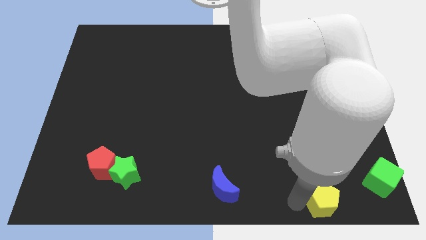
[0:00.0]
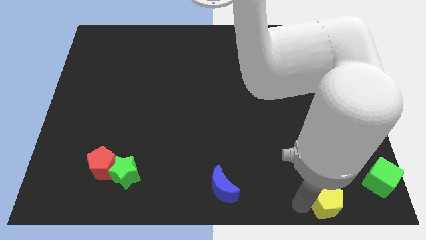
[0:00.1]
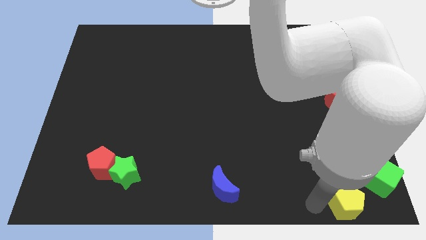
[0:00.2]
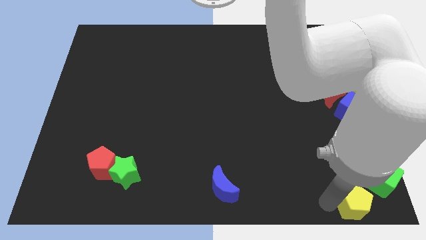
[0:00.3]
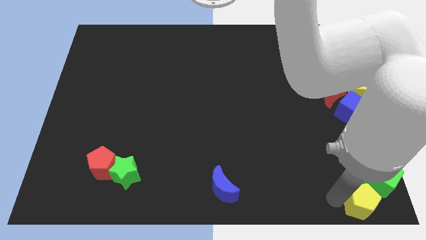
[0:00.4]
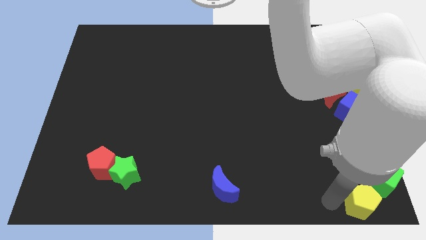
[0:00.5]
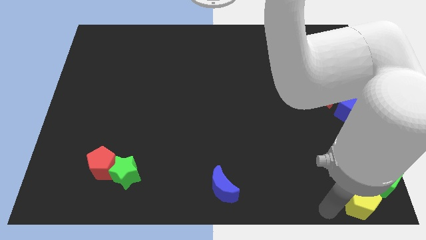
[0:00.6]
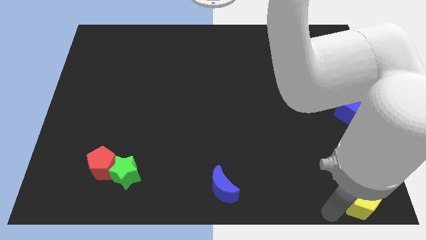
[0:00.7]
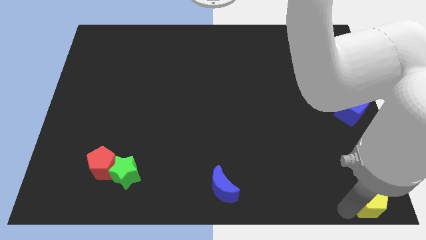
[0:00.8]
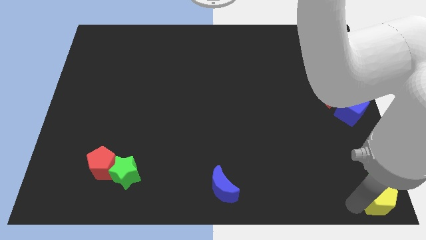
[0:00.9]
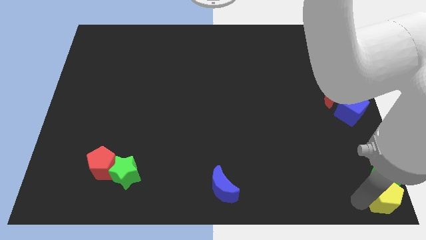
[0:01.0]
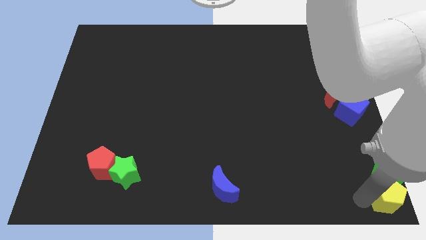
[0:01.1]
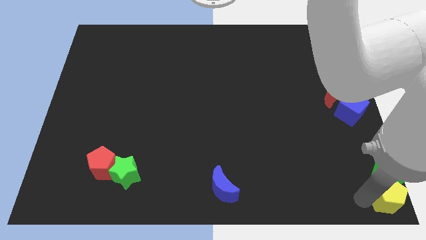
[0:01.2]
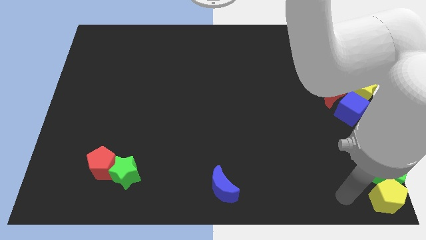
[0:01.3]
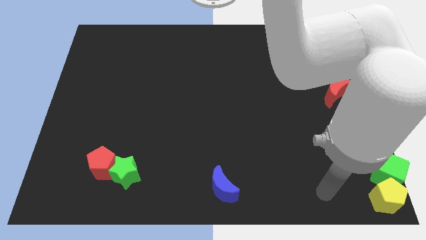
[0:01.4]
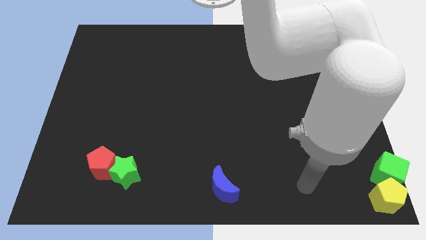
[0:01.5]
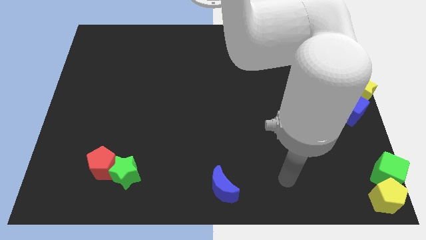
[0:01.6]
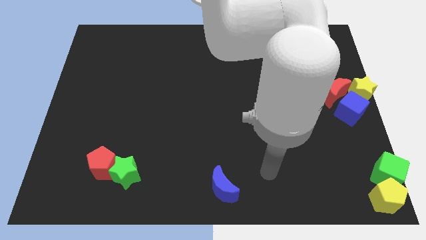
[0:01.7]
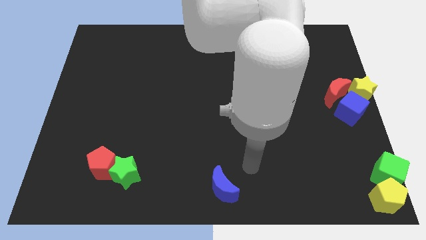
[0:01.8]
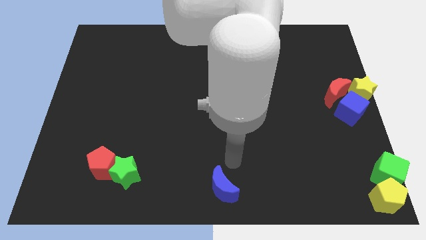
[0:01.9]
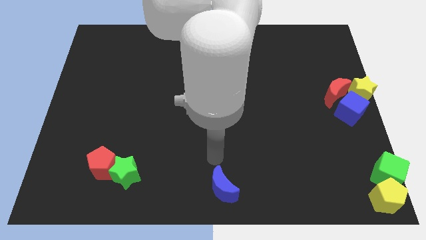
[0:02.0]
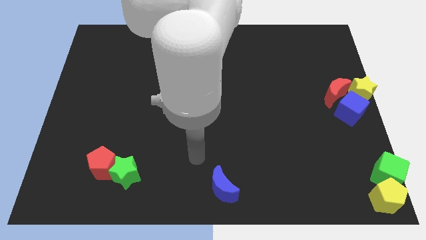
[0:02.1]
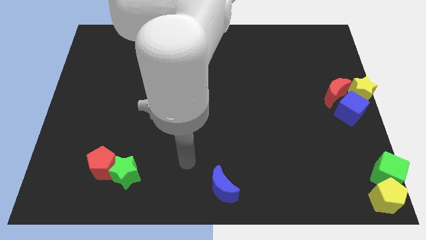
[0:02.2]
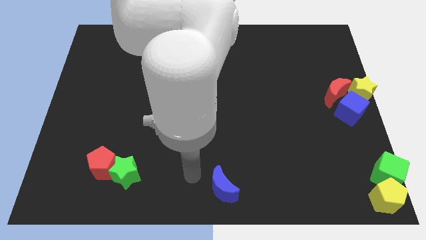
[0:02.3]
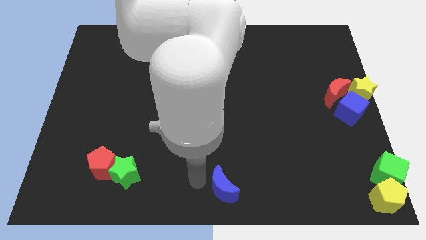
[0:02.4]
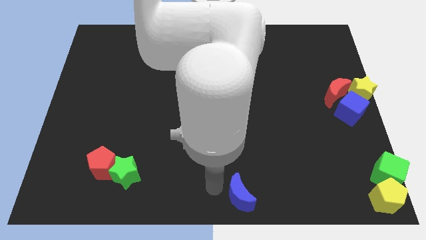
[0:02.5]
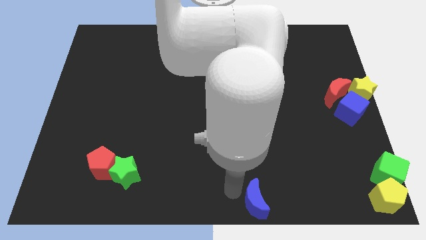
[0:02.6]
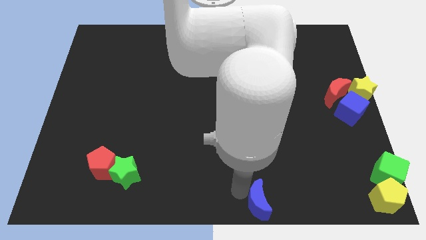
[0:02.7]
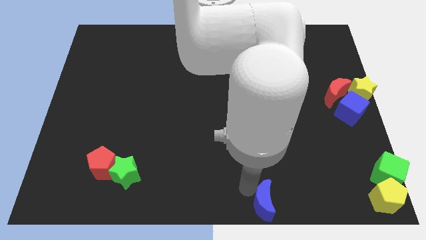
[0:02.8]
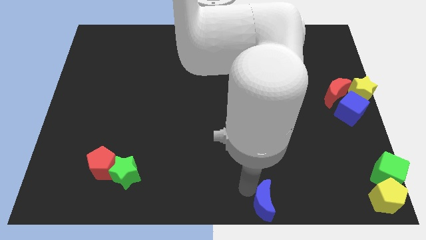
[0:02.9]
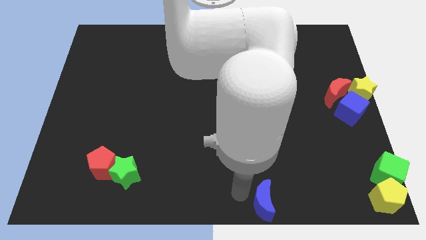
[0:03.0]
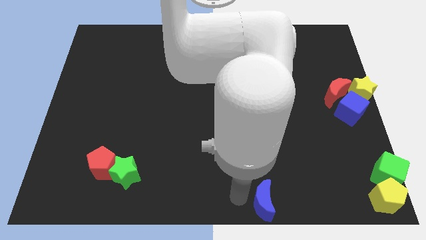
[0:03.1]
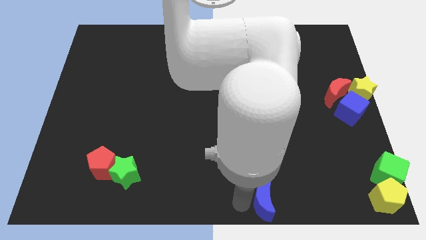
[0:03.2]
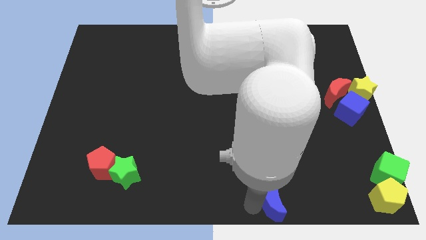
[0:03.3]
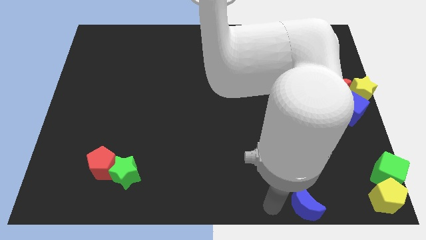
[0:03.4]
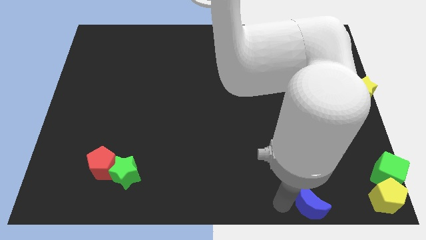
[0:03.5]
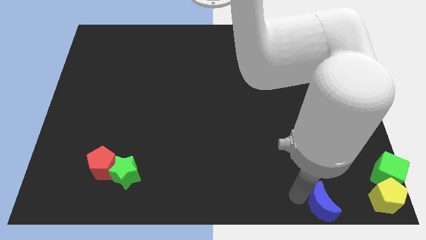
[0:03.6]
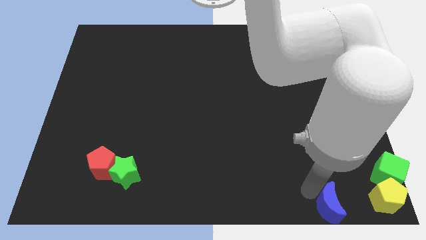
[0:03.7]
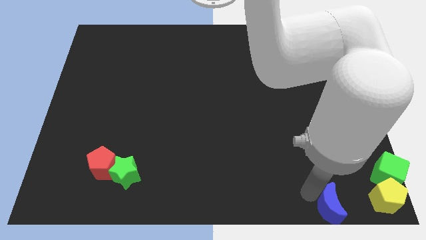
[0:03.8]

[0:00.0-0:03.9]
place the yellow pentagon below the green cube

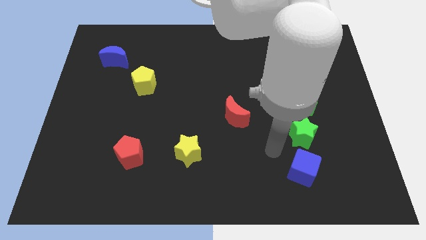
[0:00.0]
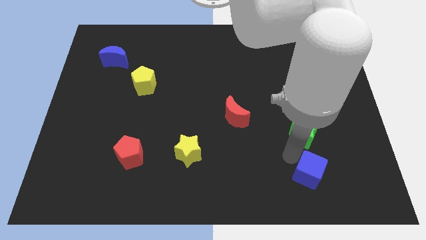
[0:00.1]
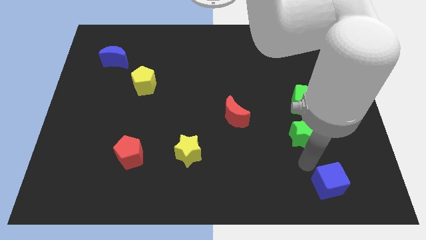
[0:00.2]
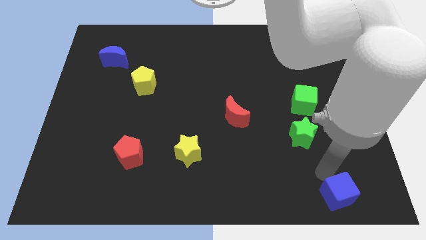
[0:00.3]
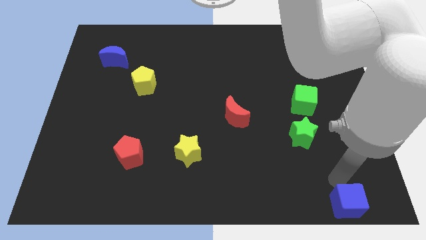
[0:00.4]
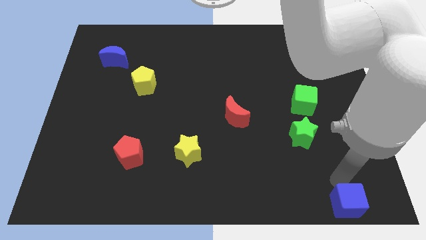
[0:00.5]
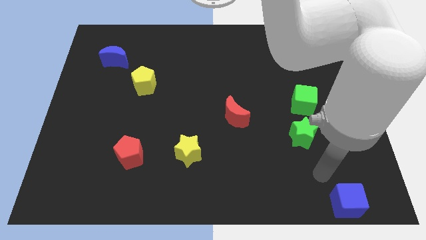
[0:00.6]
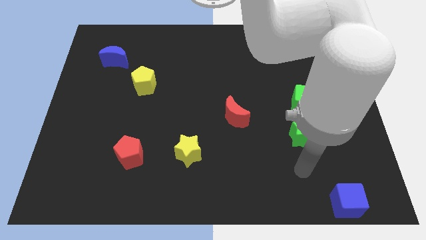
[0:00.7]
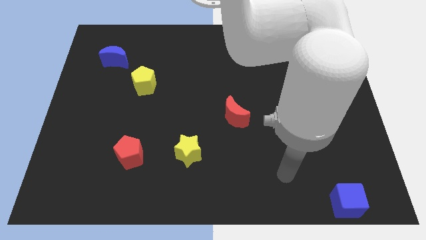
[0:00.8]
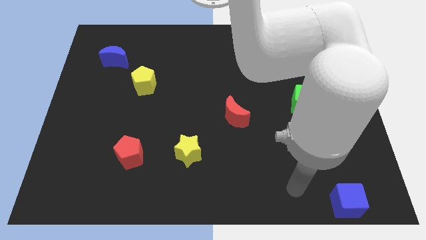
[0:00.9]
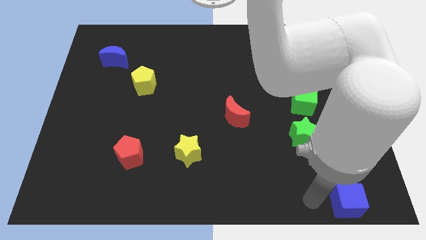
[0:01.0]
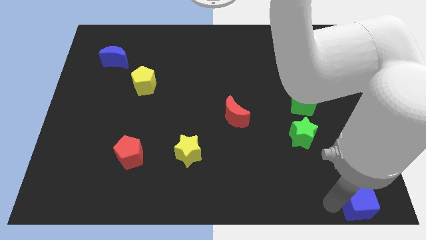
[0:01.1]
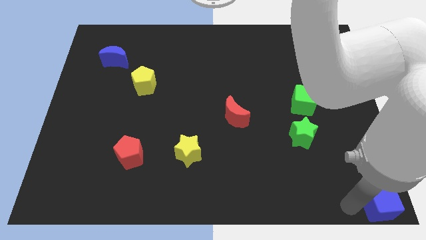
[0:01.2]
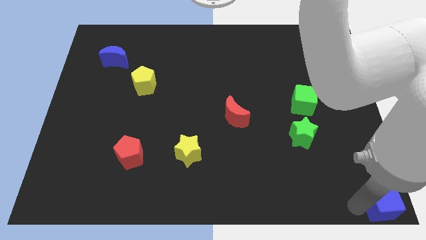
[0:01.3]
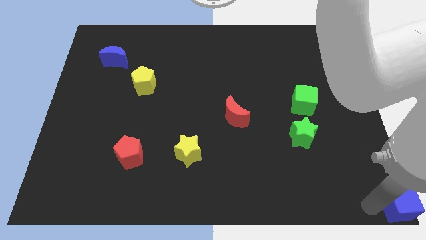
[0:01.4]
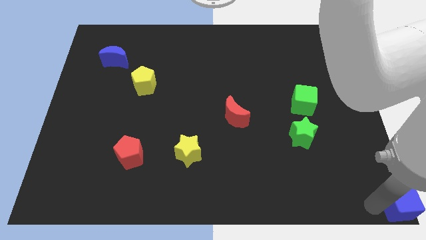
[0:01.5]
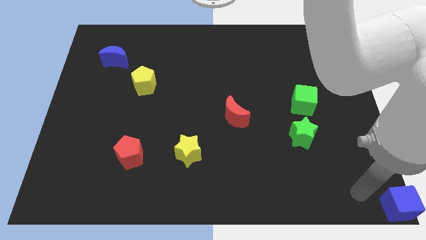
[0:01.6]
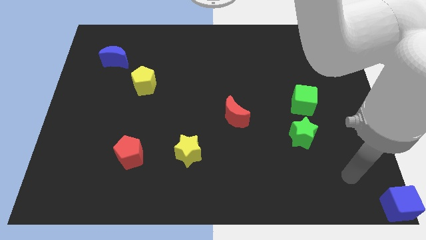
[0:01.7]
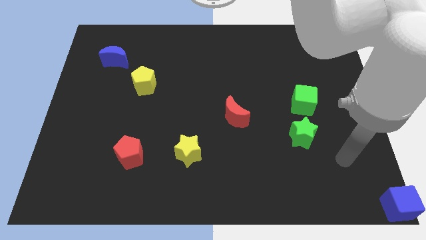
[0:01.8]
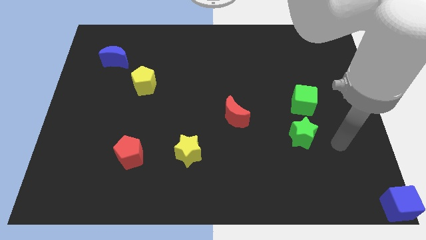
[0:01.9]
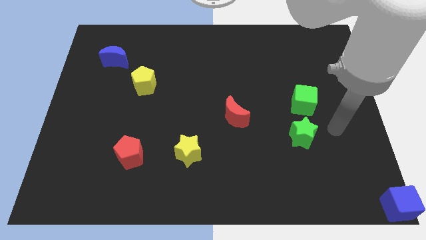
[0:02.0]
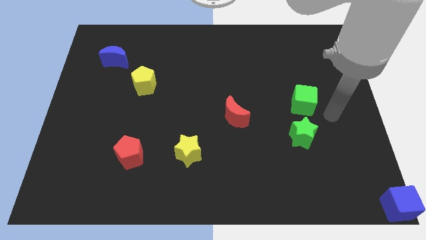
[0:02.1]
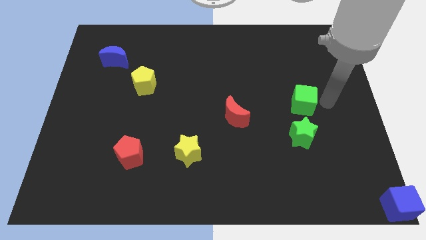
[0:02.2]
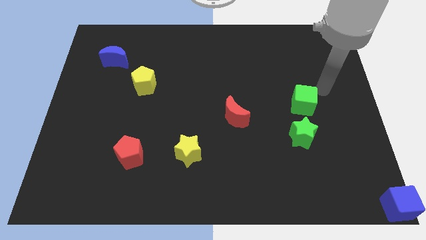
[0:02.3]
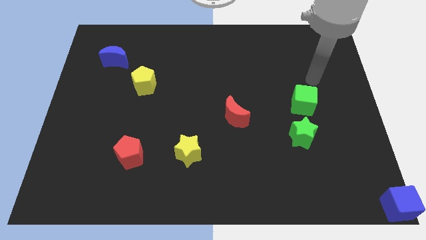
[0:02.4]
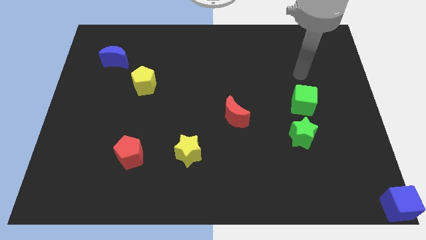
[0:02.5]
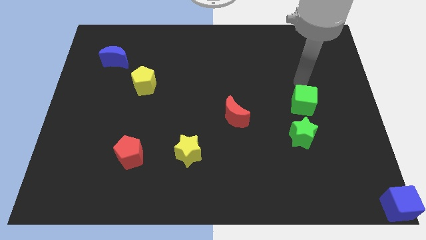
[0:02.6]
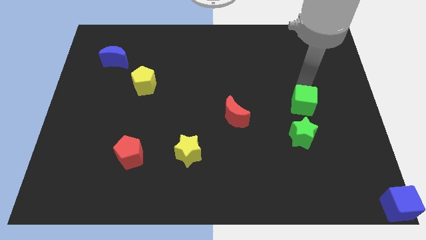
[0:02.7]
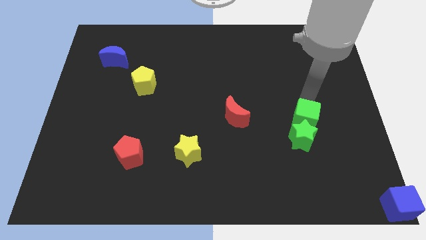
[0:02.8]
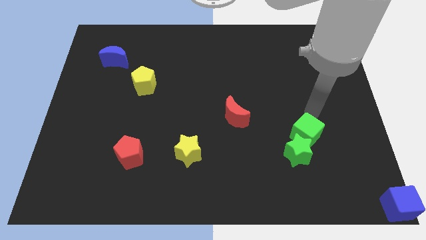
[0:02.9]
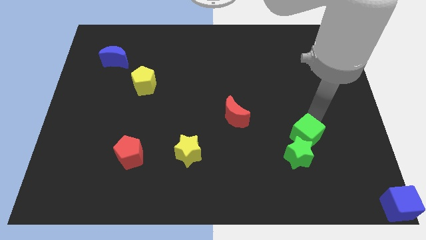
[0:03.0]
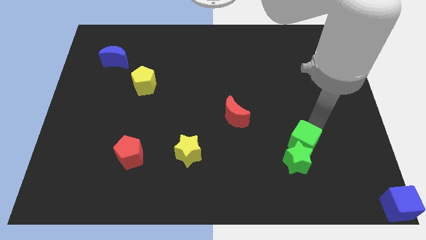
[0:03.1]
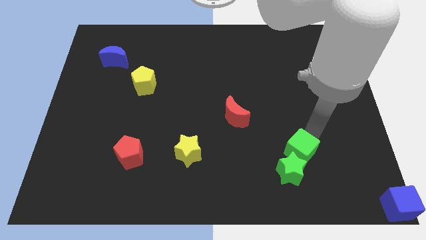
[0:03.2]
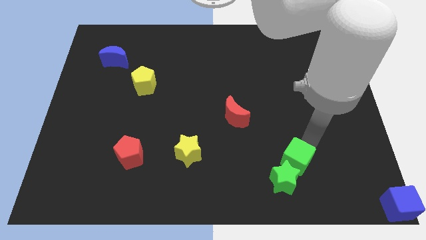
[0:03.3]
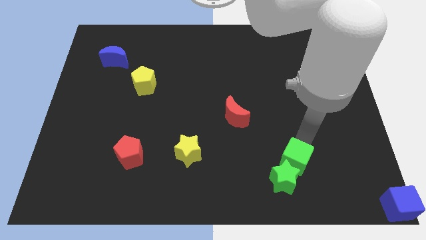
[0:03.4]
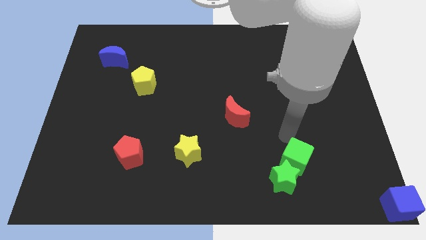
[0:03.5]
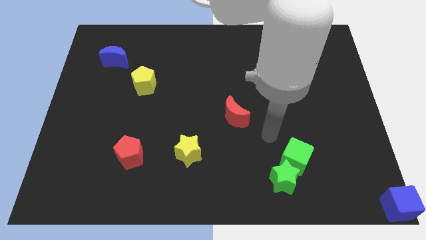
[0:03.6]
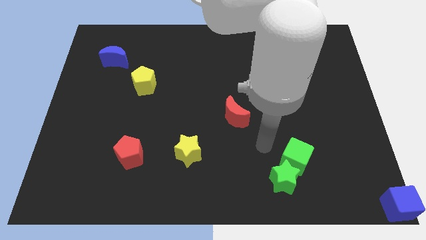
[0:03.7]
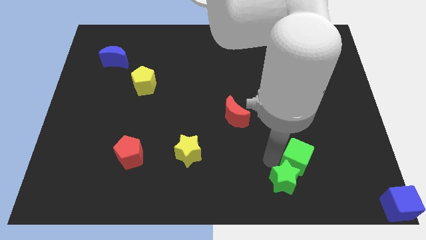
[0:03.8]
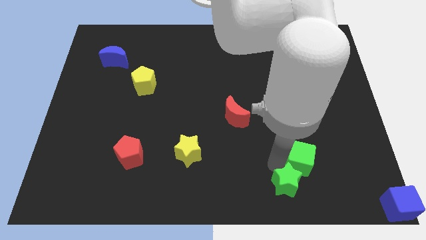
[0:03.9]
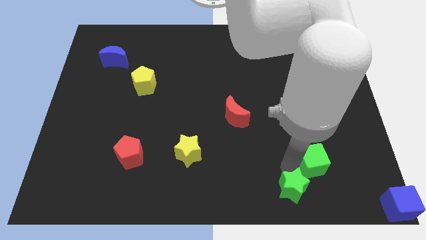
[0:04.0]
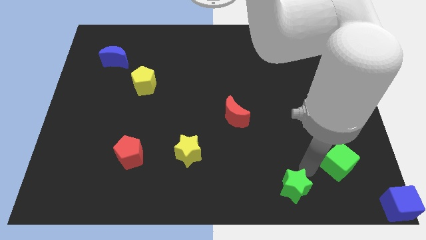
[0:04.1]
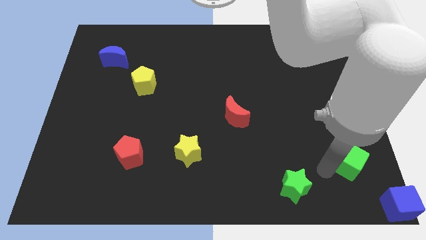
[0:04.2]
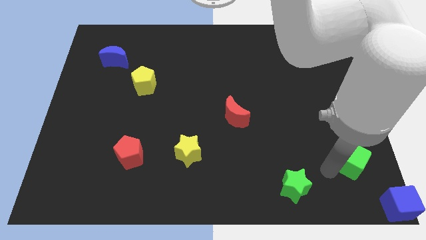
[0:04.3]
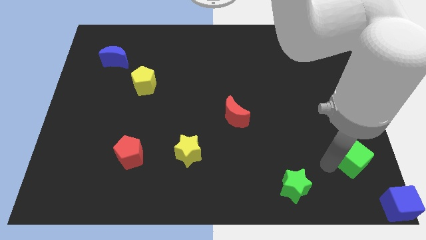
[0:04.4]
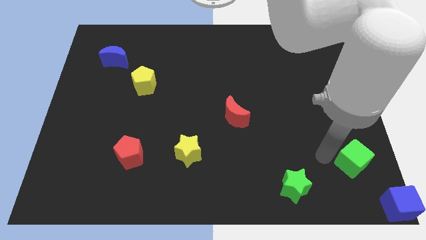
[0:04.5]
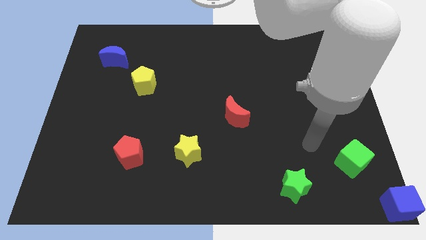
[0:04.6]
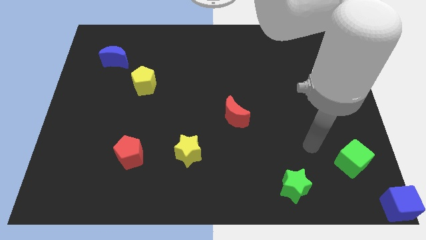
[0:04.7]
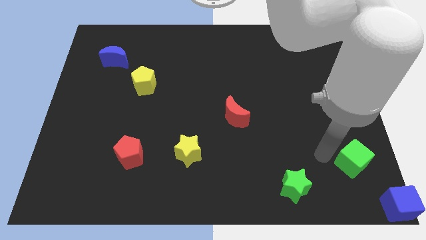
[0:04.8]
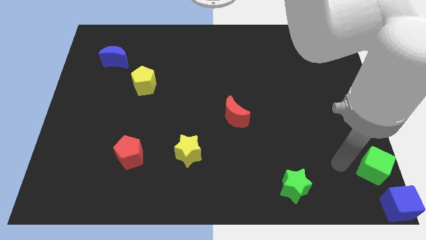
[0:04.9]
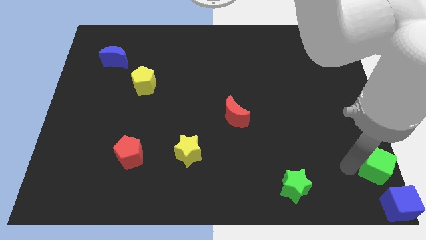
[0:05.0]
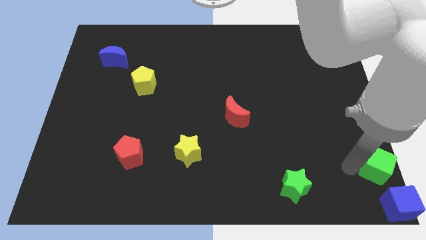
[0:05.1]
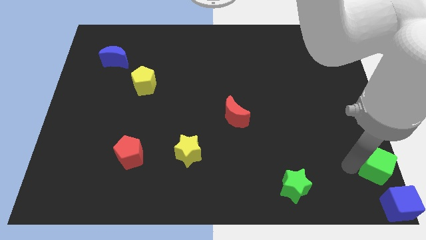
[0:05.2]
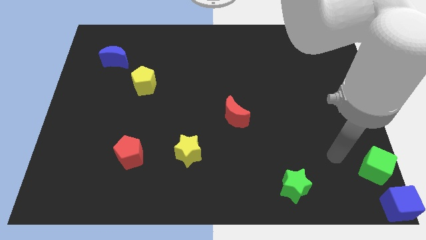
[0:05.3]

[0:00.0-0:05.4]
push both the cubes to the bottom right corner of the board
